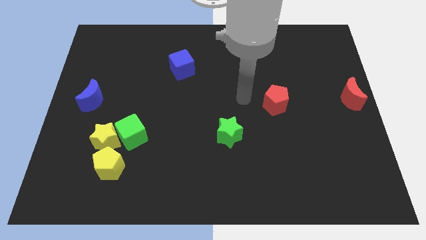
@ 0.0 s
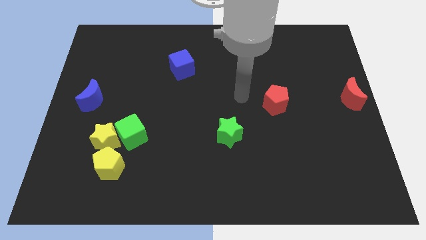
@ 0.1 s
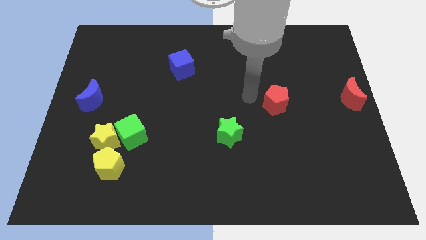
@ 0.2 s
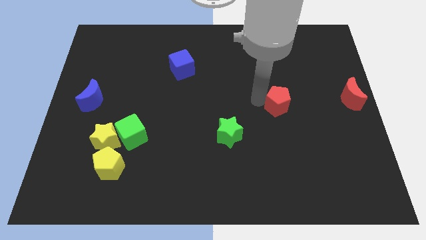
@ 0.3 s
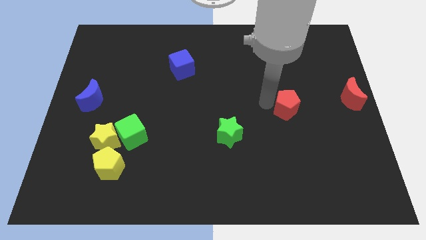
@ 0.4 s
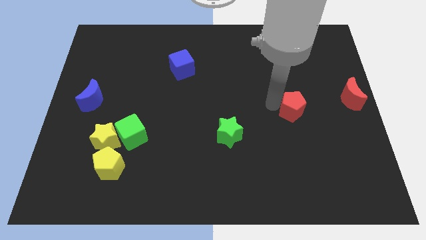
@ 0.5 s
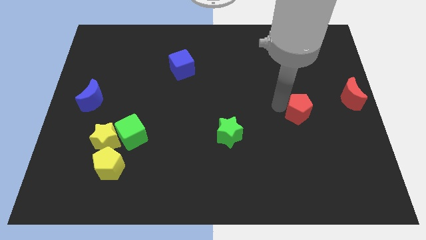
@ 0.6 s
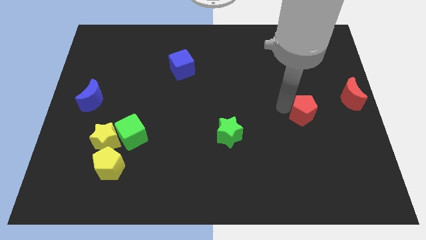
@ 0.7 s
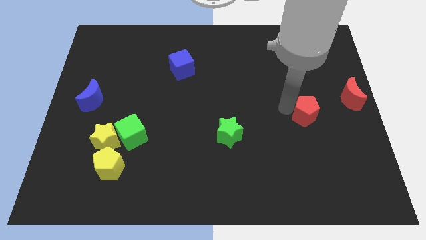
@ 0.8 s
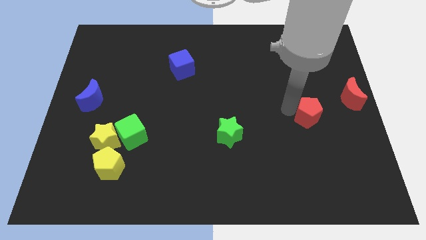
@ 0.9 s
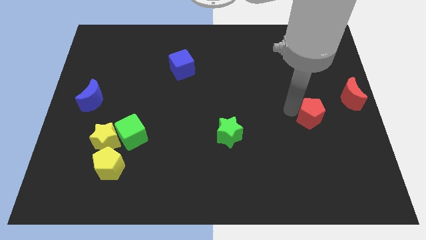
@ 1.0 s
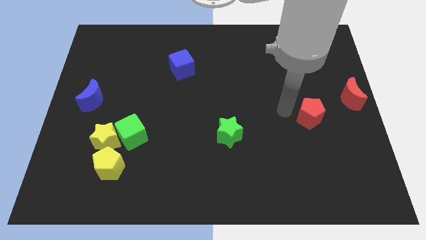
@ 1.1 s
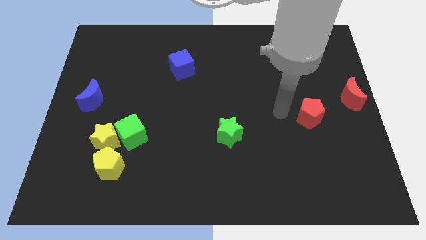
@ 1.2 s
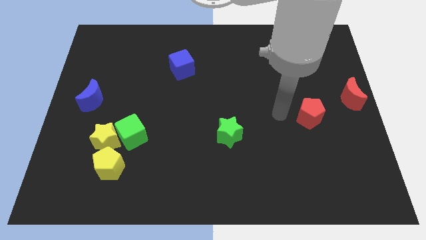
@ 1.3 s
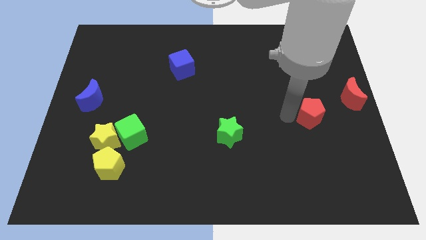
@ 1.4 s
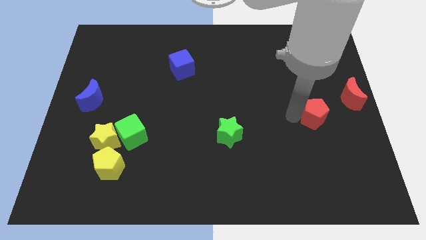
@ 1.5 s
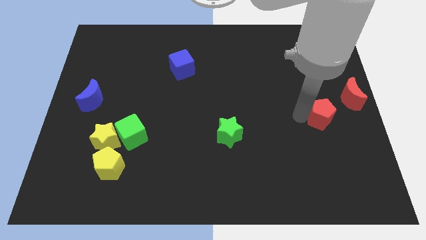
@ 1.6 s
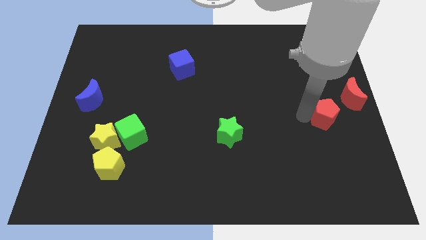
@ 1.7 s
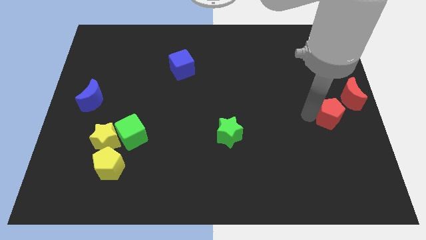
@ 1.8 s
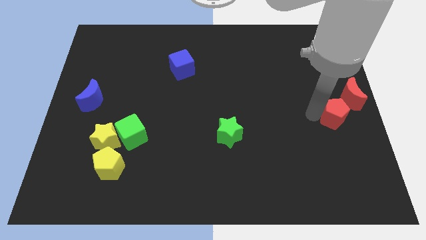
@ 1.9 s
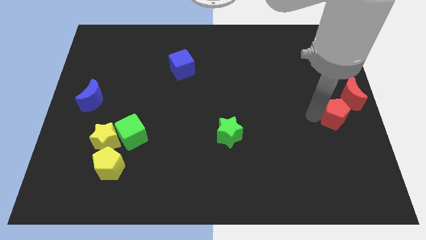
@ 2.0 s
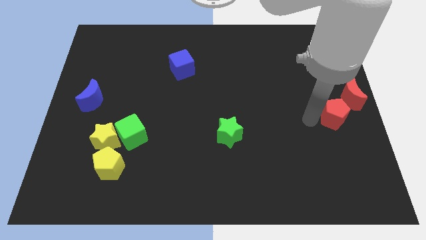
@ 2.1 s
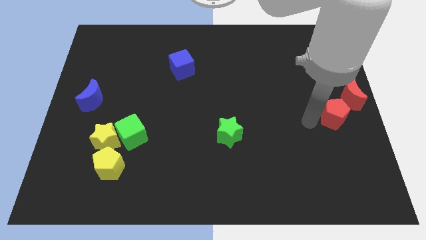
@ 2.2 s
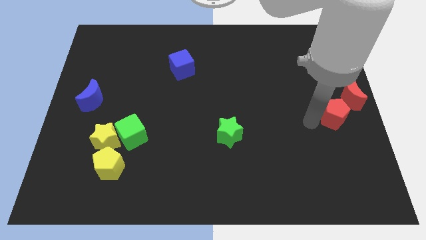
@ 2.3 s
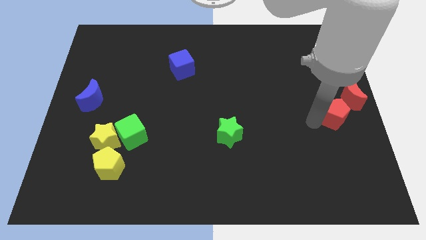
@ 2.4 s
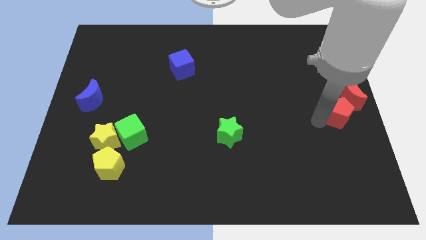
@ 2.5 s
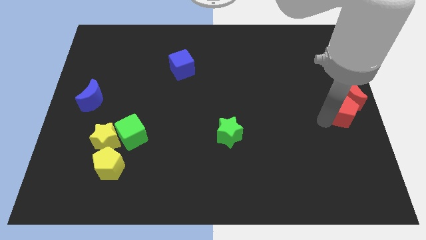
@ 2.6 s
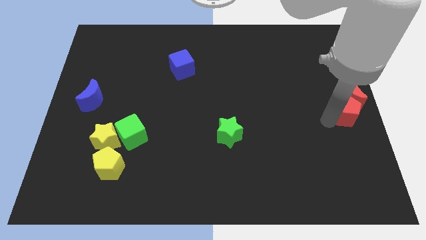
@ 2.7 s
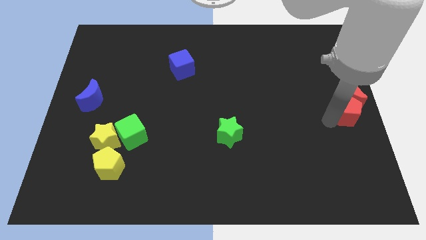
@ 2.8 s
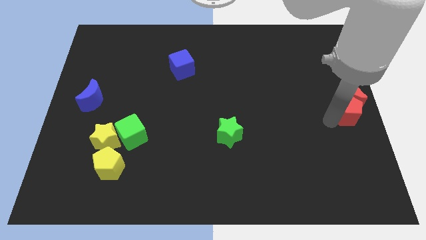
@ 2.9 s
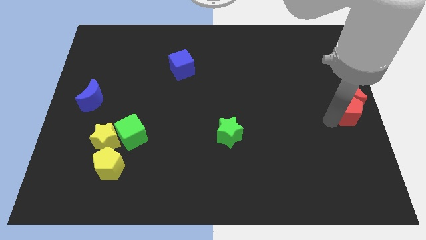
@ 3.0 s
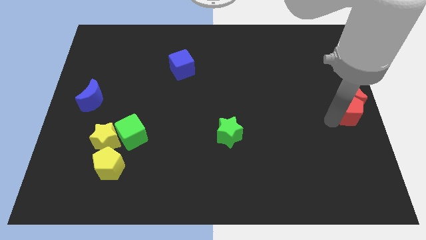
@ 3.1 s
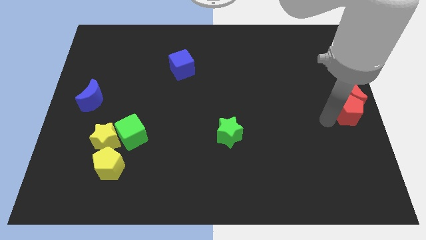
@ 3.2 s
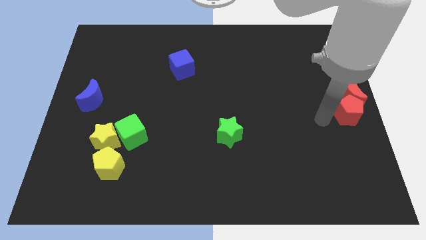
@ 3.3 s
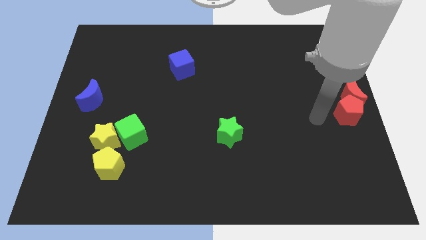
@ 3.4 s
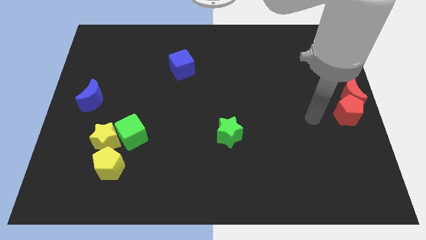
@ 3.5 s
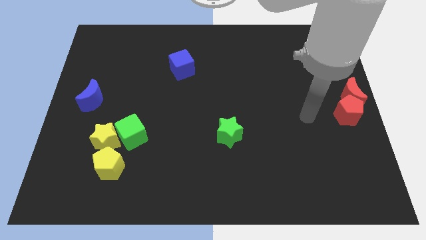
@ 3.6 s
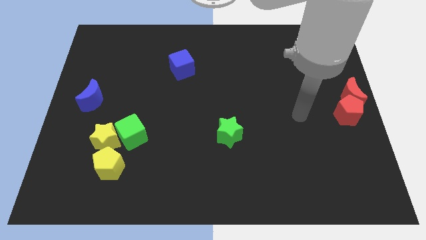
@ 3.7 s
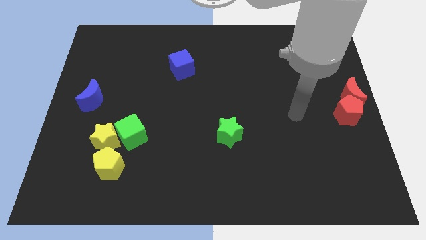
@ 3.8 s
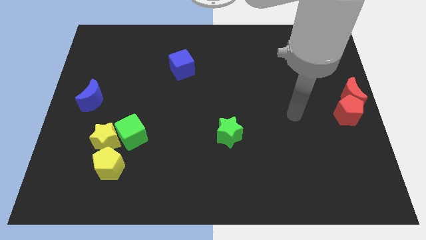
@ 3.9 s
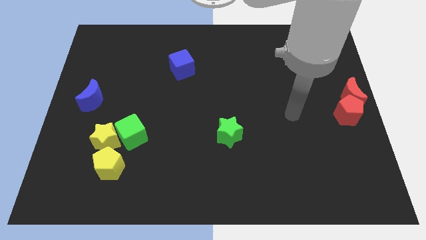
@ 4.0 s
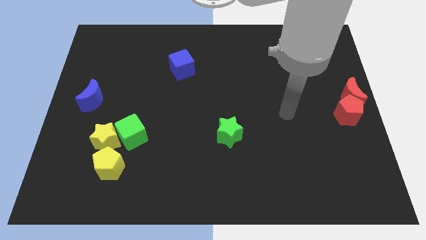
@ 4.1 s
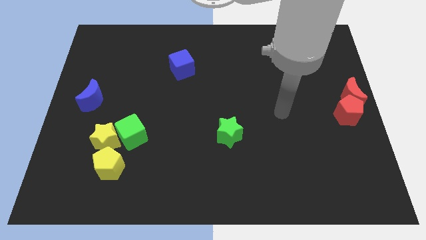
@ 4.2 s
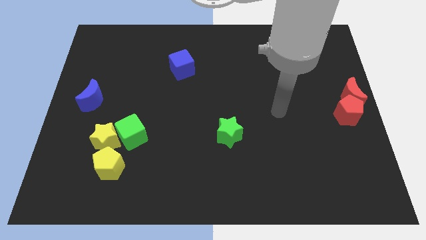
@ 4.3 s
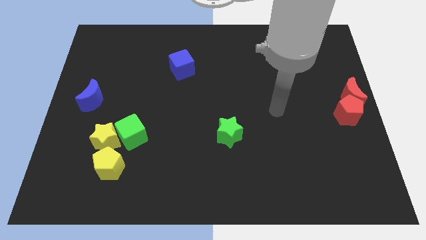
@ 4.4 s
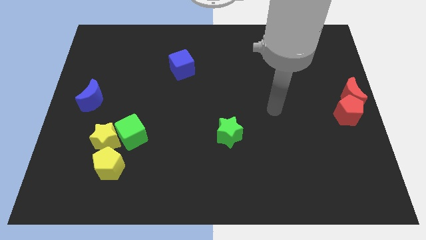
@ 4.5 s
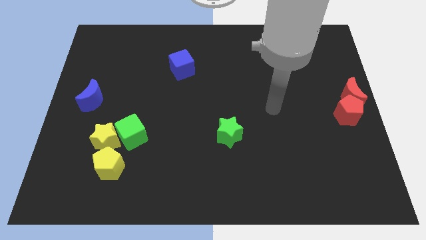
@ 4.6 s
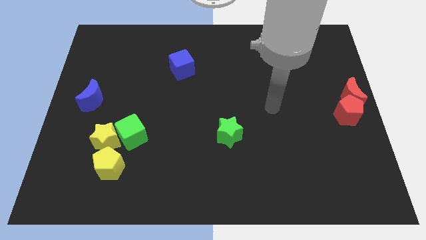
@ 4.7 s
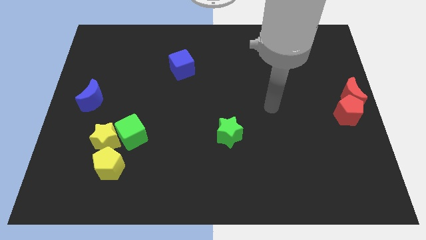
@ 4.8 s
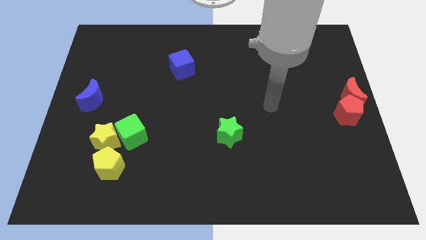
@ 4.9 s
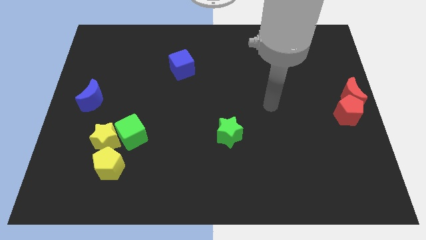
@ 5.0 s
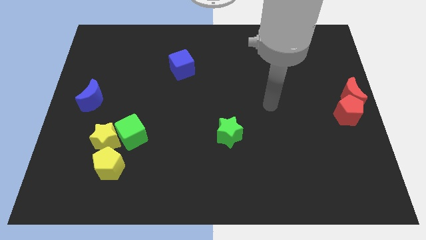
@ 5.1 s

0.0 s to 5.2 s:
push red pentagon beside red moon

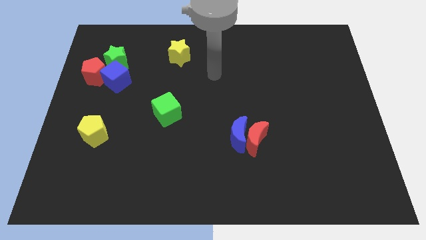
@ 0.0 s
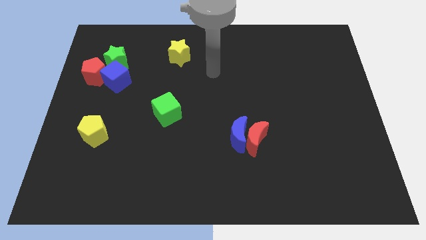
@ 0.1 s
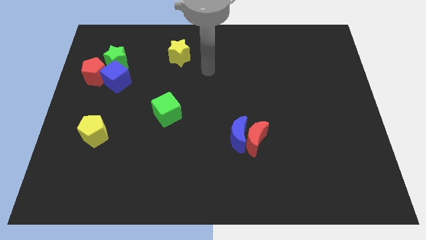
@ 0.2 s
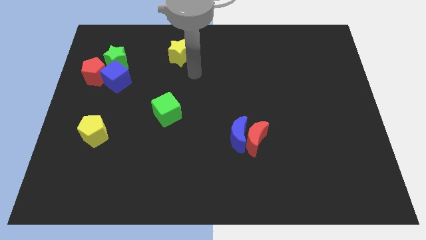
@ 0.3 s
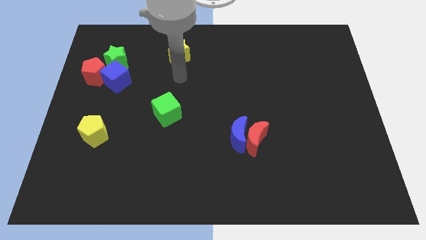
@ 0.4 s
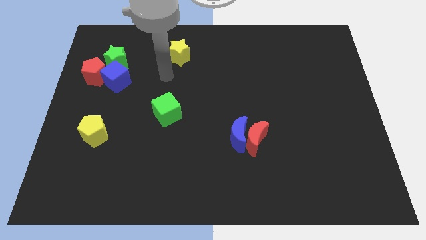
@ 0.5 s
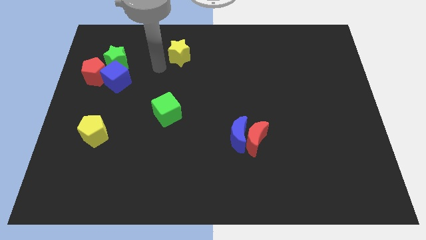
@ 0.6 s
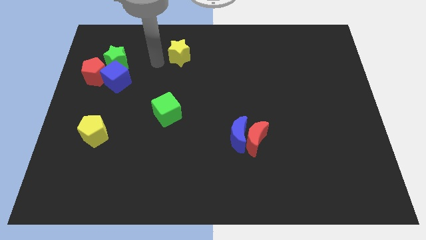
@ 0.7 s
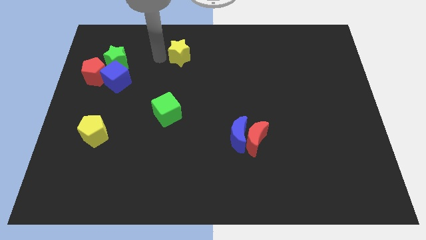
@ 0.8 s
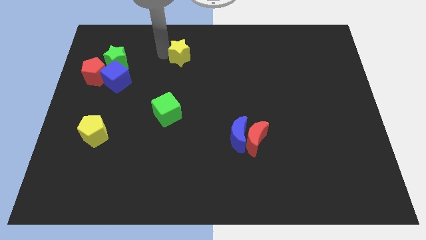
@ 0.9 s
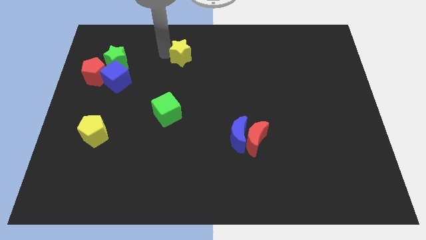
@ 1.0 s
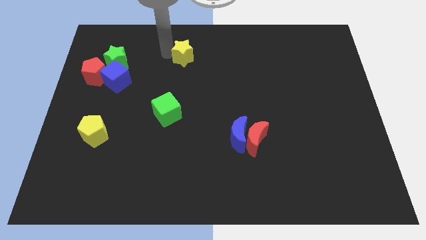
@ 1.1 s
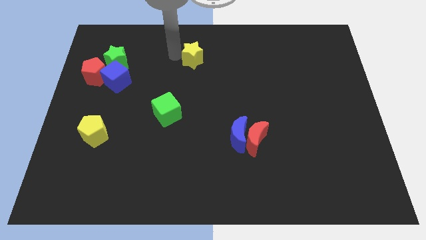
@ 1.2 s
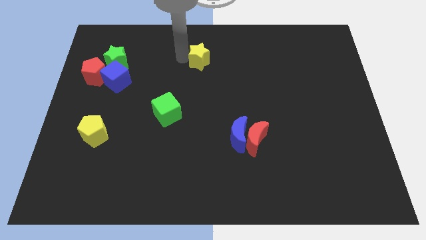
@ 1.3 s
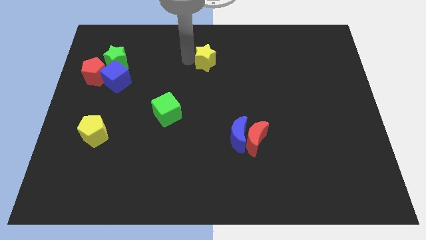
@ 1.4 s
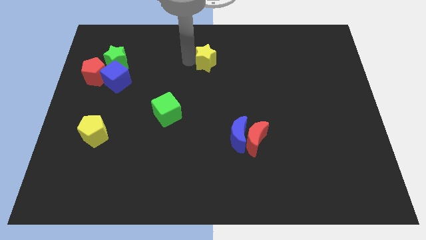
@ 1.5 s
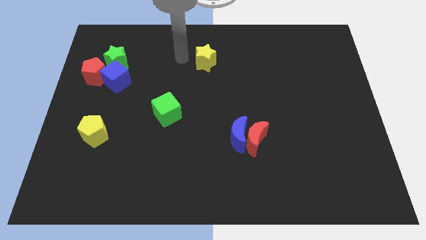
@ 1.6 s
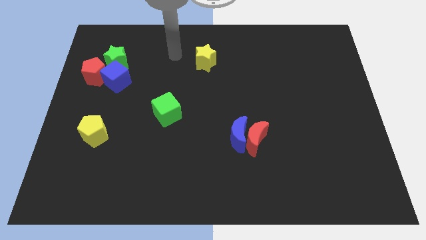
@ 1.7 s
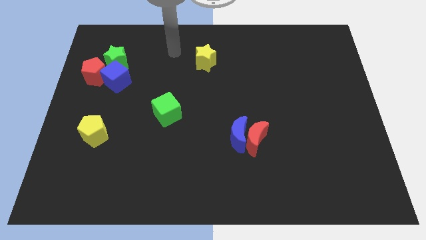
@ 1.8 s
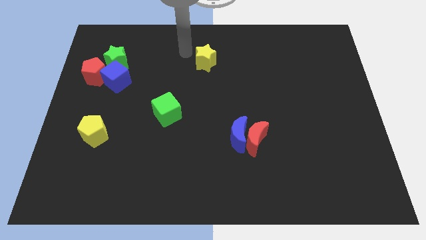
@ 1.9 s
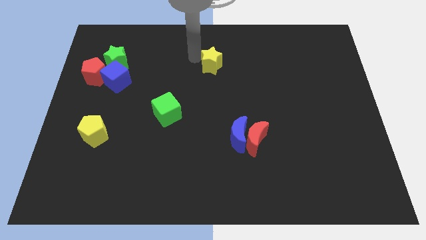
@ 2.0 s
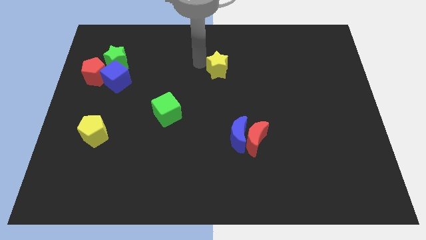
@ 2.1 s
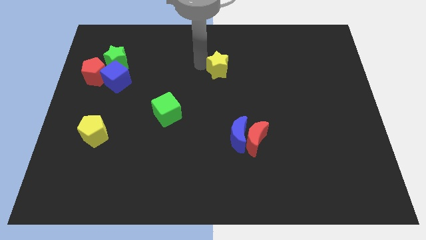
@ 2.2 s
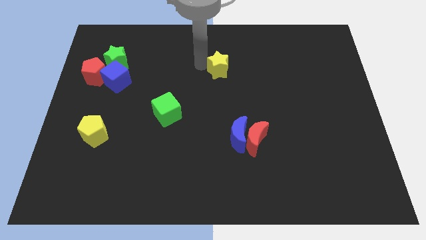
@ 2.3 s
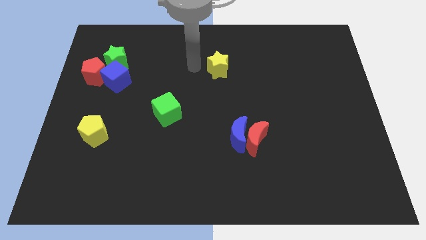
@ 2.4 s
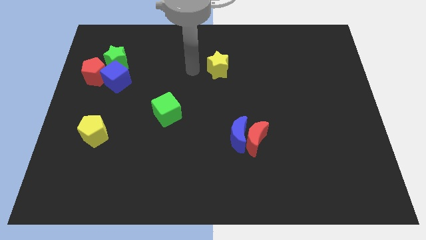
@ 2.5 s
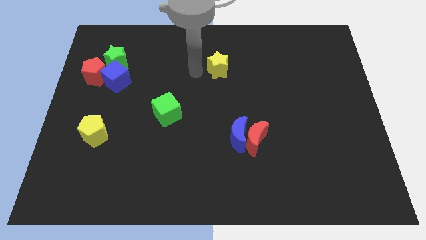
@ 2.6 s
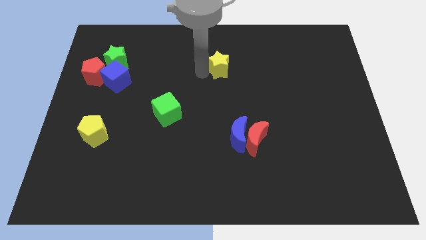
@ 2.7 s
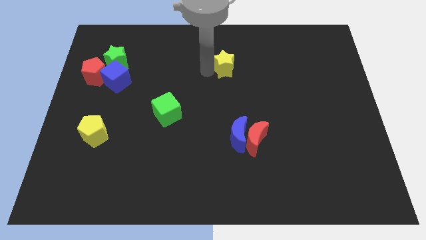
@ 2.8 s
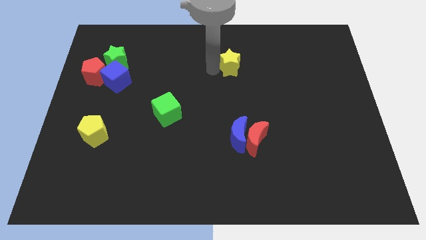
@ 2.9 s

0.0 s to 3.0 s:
move the yellow star slightly down middle of the board

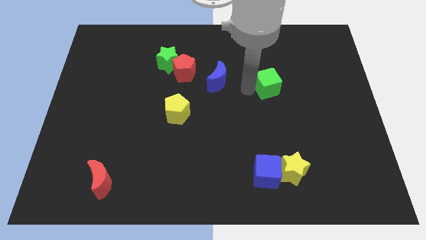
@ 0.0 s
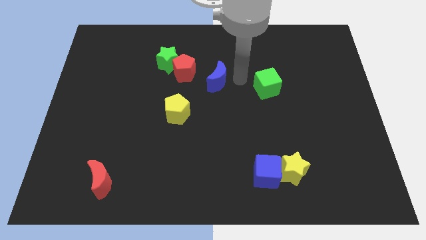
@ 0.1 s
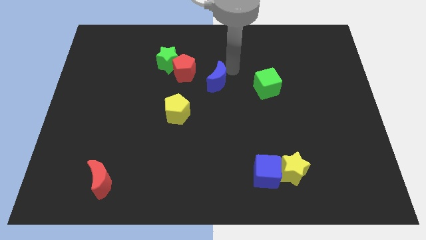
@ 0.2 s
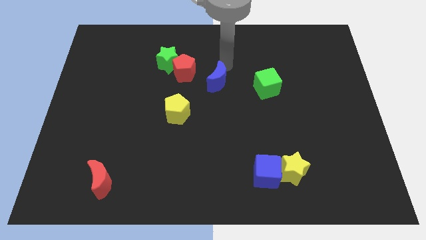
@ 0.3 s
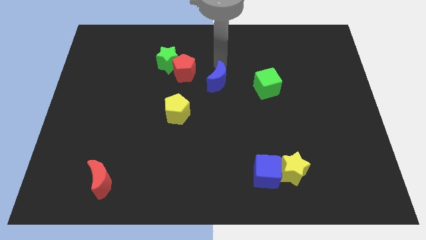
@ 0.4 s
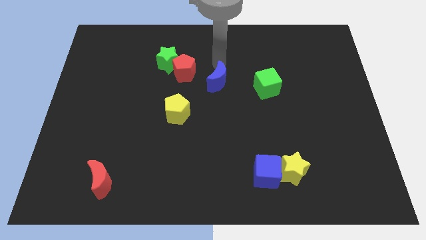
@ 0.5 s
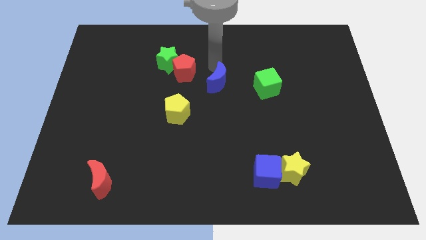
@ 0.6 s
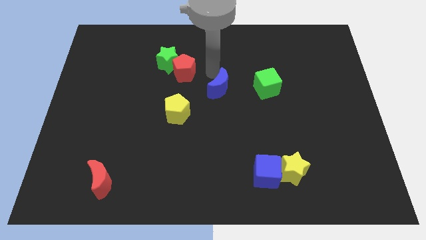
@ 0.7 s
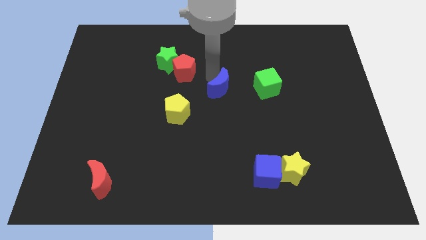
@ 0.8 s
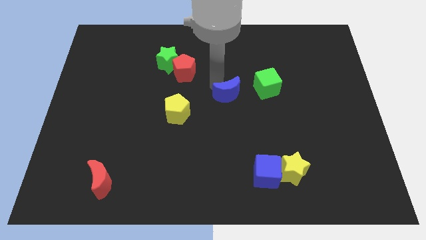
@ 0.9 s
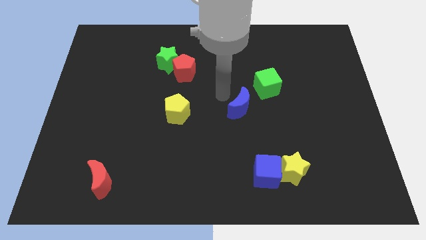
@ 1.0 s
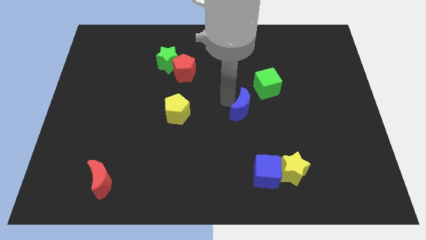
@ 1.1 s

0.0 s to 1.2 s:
move the blue moon left to the green cube
